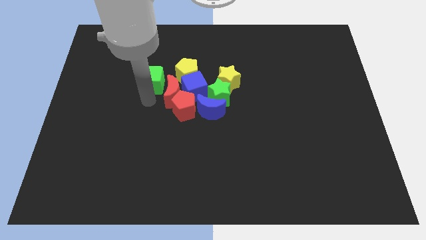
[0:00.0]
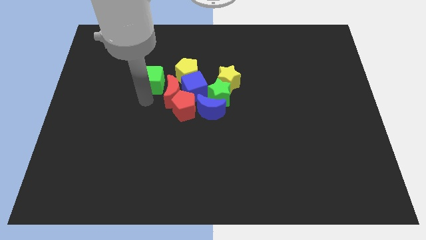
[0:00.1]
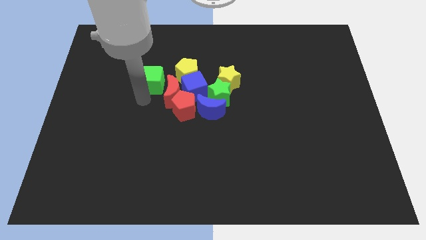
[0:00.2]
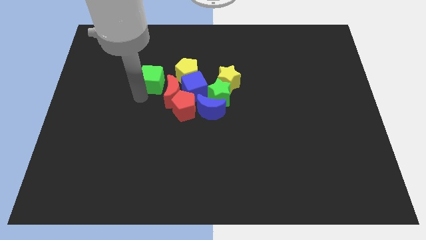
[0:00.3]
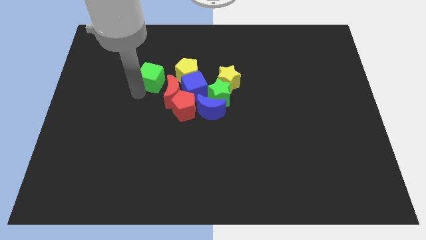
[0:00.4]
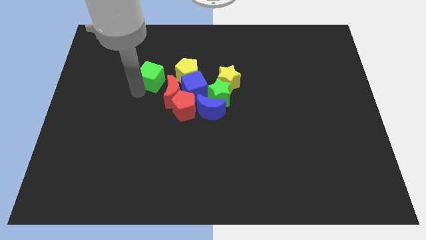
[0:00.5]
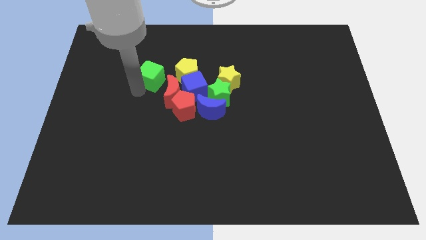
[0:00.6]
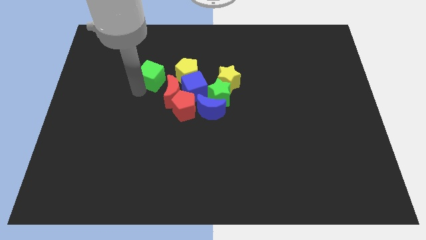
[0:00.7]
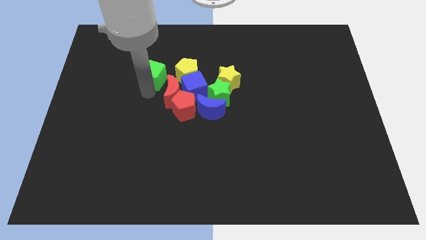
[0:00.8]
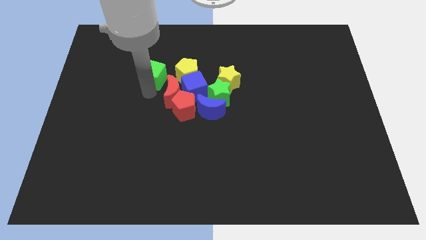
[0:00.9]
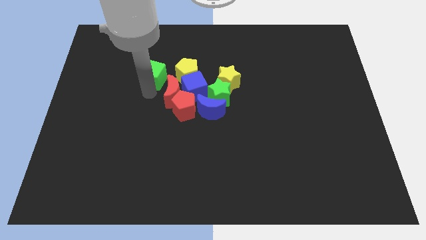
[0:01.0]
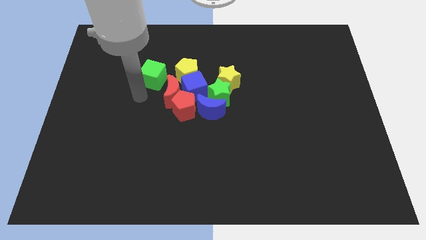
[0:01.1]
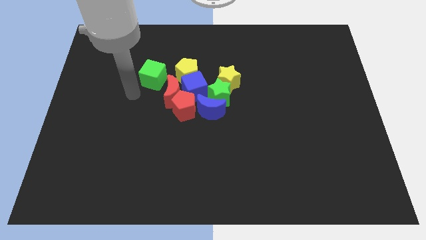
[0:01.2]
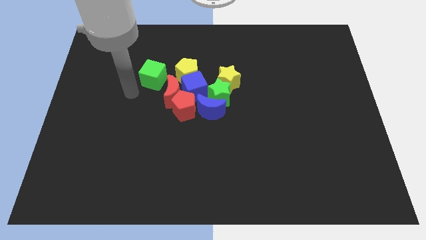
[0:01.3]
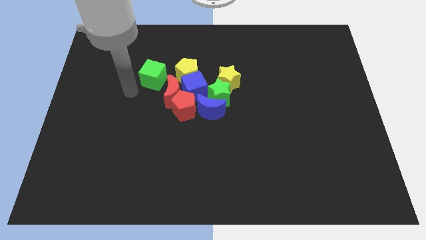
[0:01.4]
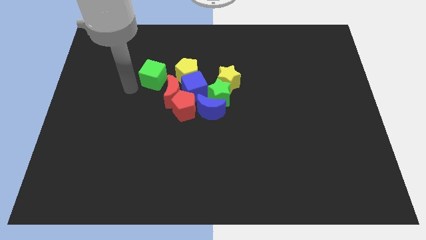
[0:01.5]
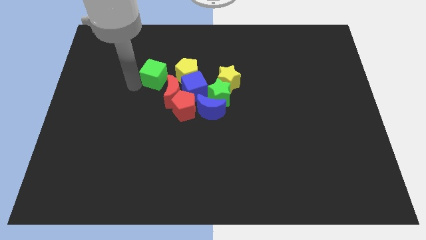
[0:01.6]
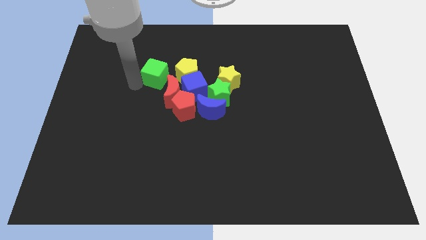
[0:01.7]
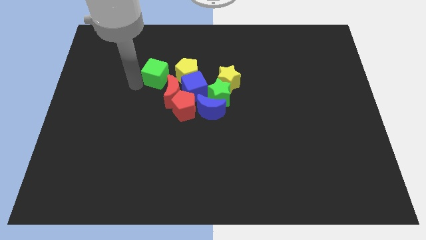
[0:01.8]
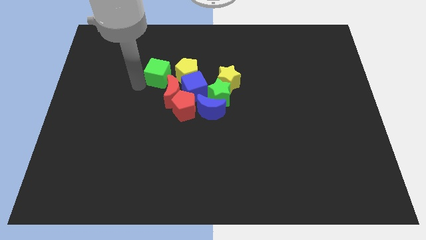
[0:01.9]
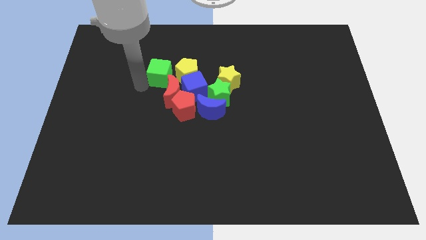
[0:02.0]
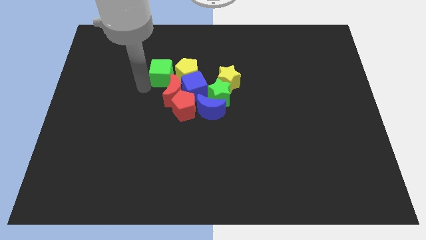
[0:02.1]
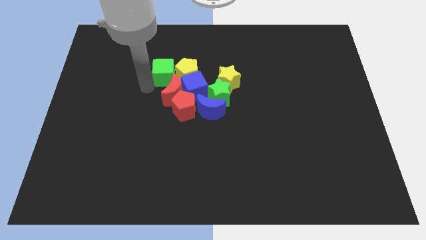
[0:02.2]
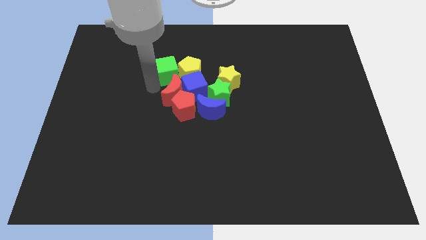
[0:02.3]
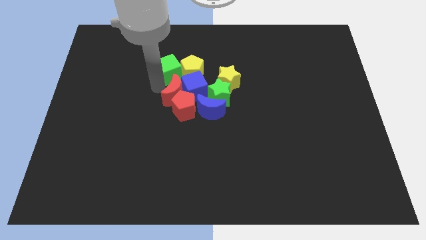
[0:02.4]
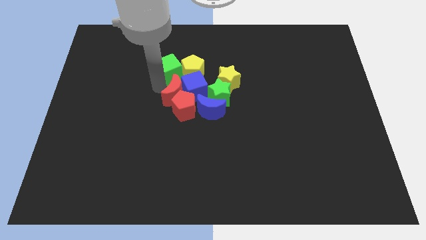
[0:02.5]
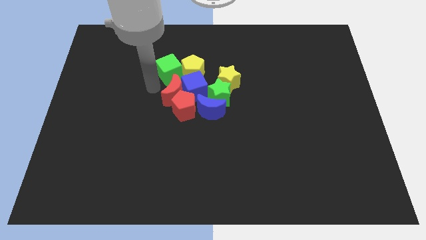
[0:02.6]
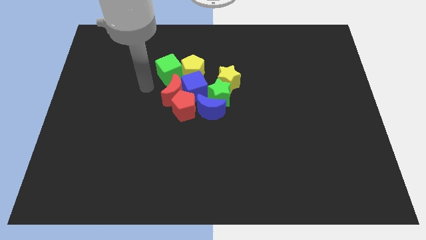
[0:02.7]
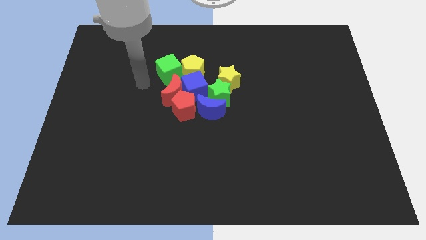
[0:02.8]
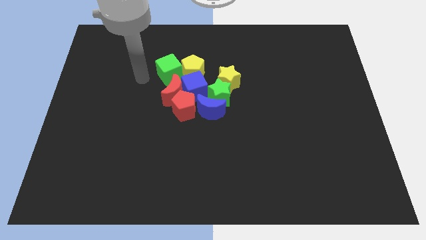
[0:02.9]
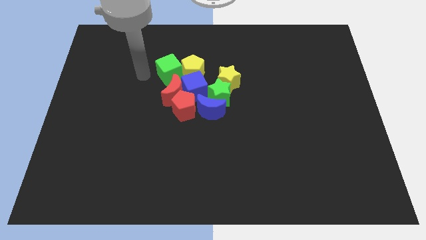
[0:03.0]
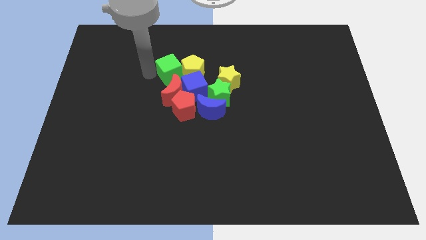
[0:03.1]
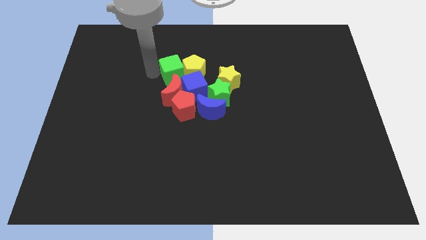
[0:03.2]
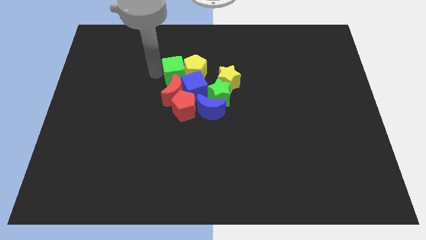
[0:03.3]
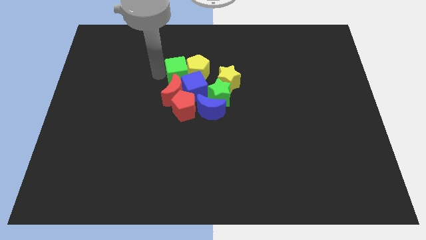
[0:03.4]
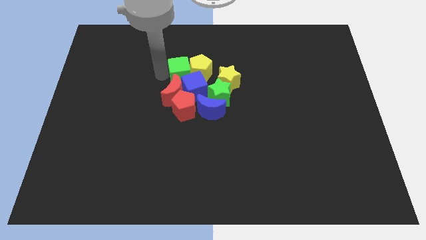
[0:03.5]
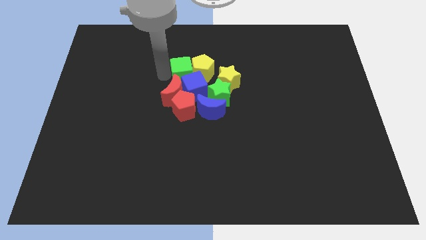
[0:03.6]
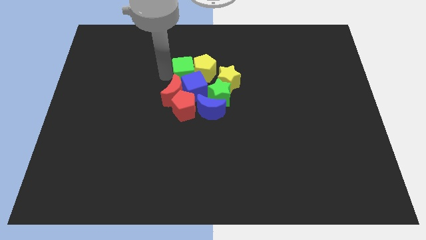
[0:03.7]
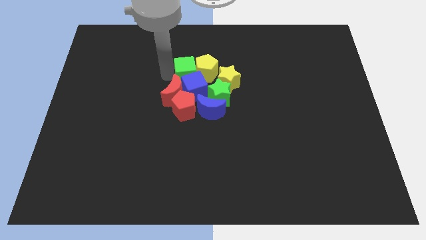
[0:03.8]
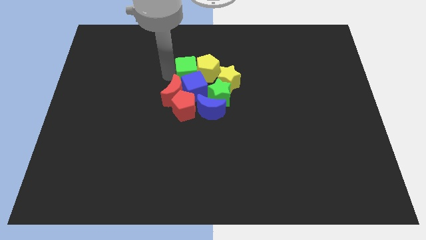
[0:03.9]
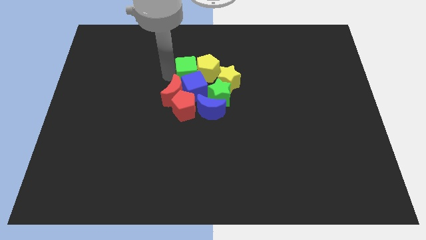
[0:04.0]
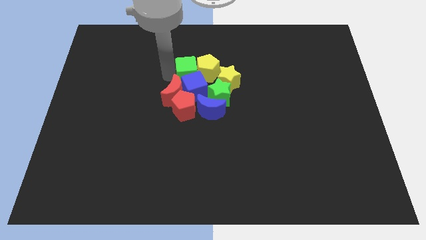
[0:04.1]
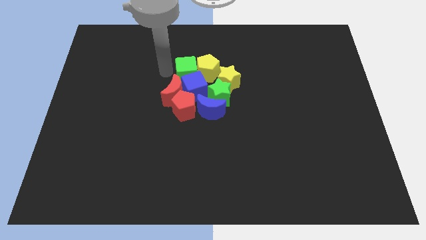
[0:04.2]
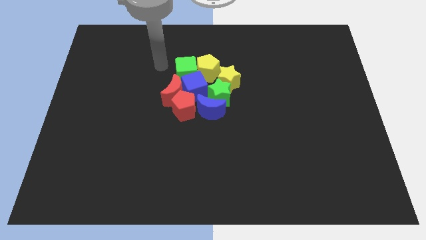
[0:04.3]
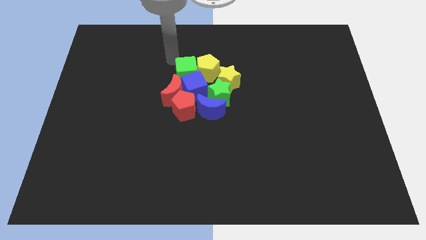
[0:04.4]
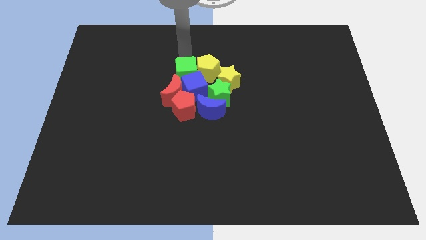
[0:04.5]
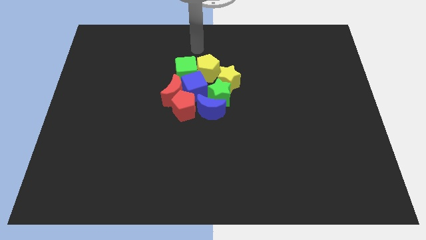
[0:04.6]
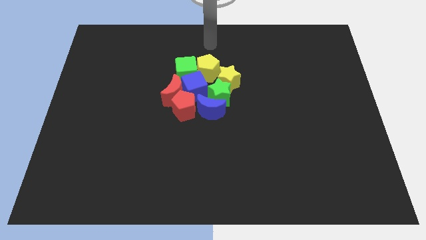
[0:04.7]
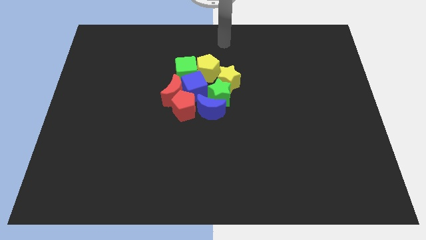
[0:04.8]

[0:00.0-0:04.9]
place the green cube to the left of the yellow pentagon

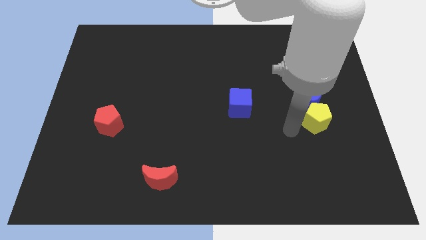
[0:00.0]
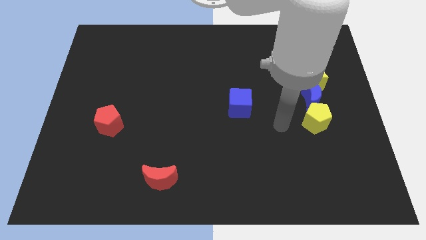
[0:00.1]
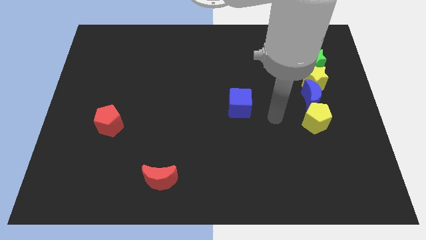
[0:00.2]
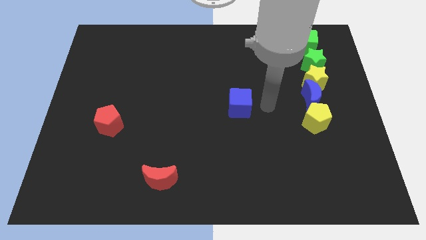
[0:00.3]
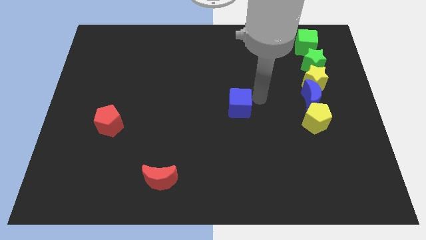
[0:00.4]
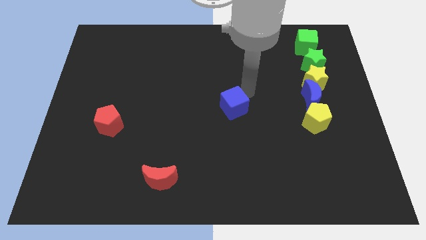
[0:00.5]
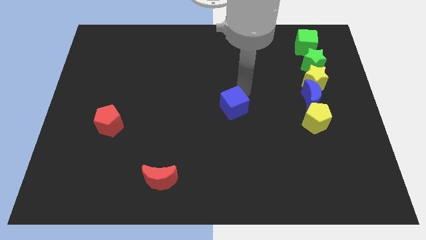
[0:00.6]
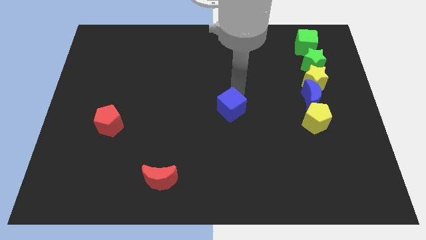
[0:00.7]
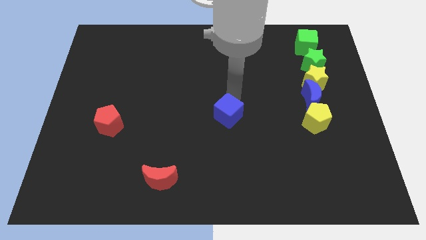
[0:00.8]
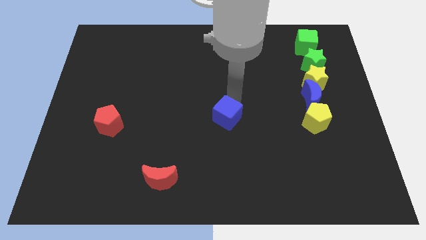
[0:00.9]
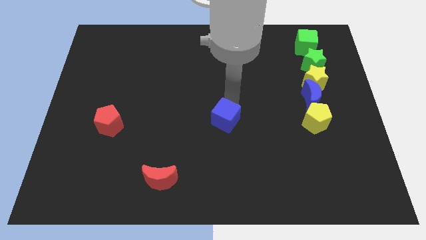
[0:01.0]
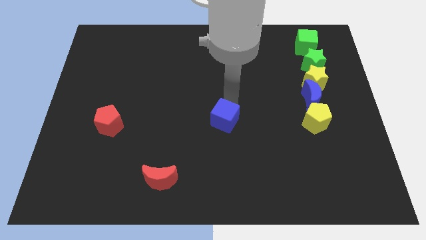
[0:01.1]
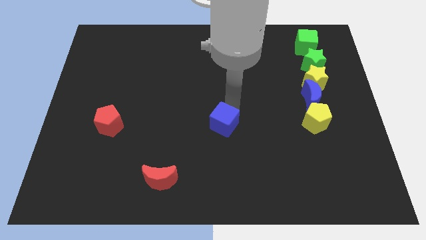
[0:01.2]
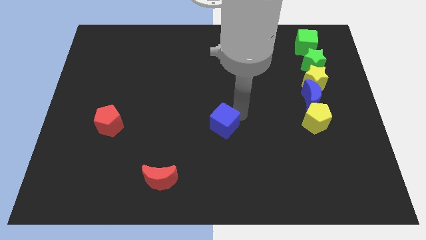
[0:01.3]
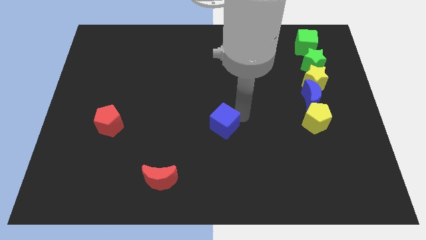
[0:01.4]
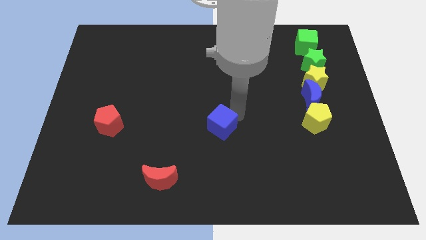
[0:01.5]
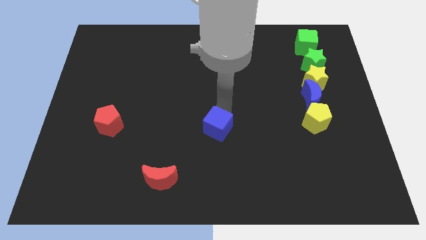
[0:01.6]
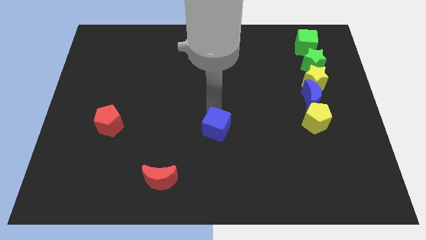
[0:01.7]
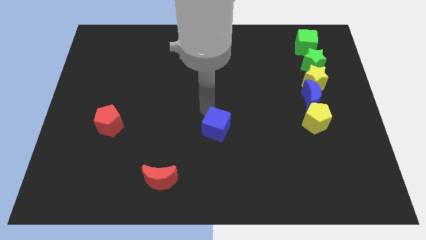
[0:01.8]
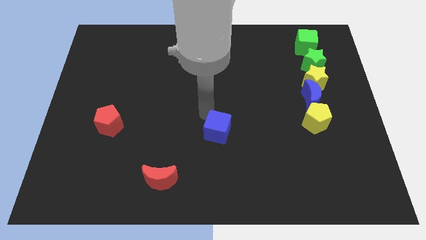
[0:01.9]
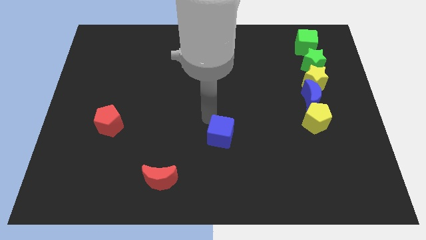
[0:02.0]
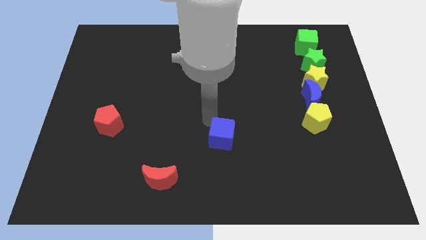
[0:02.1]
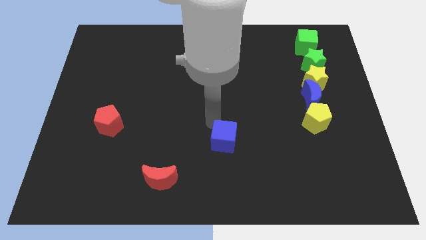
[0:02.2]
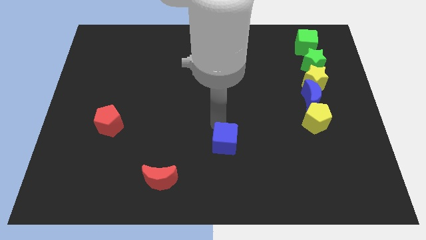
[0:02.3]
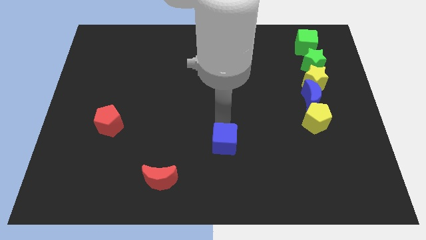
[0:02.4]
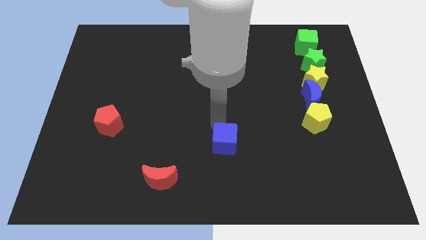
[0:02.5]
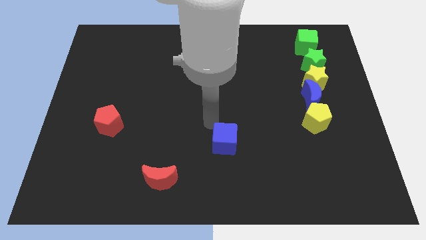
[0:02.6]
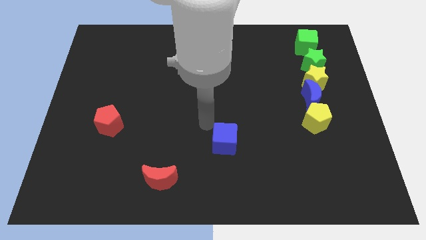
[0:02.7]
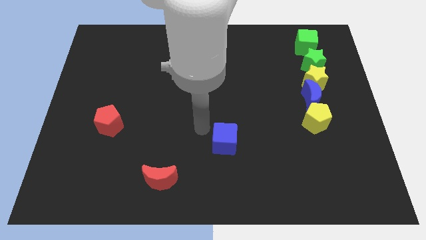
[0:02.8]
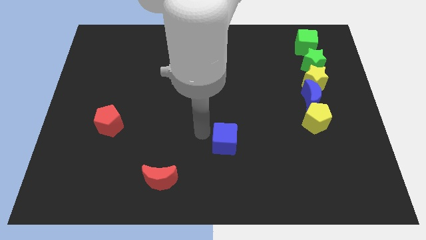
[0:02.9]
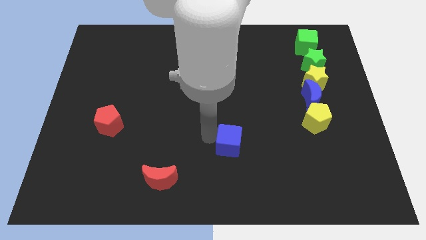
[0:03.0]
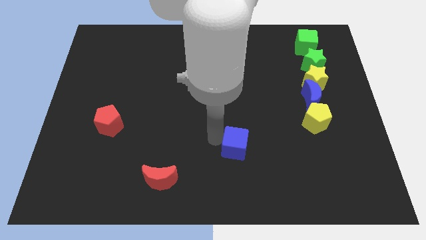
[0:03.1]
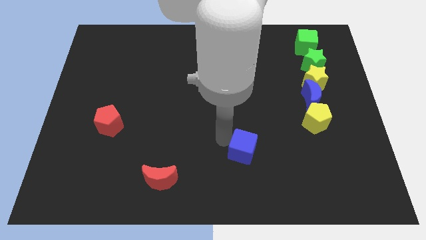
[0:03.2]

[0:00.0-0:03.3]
push the blue cube between the red moon and yellow pentagon

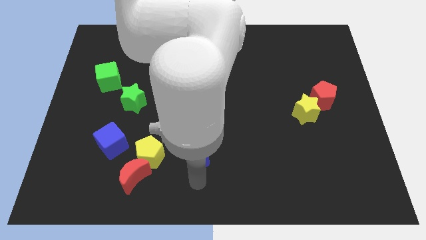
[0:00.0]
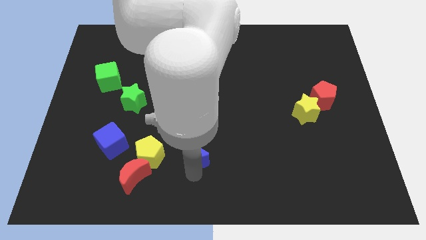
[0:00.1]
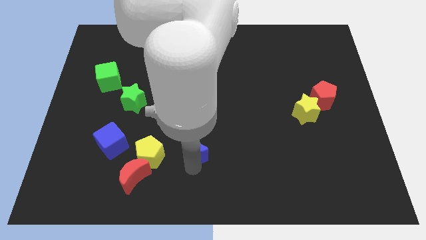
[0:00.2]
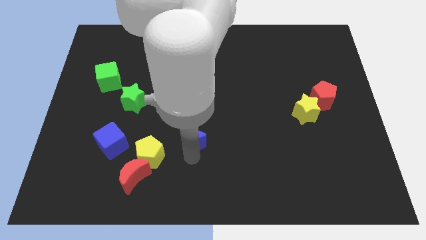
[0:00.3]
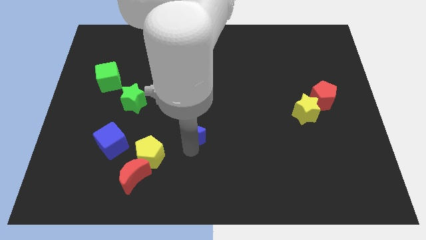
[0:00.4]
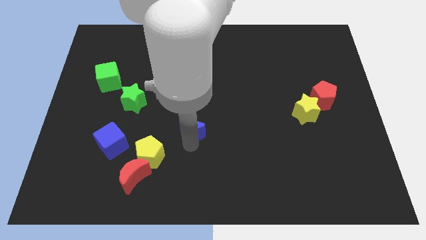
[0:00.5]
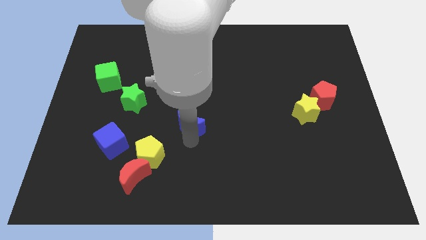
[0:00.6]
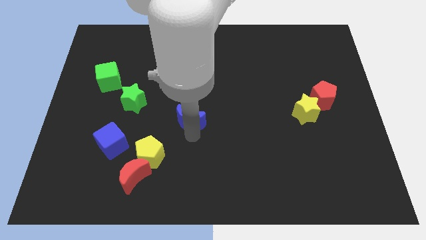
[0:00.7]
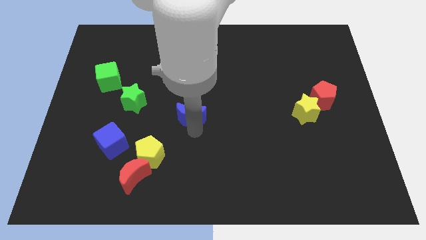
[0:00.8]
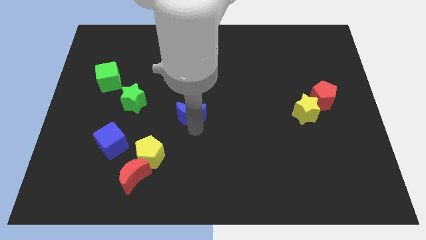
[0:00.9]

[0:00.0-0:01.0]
move the blue moon upwards
